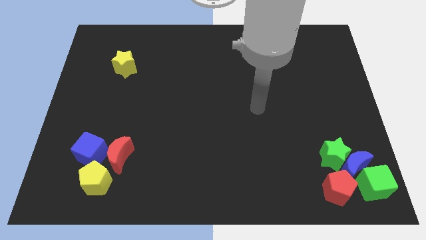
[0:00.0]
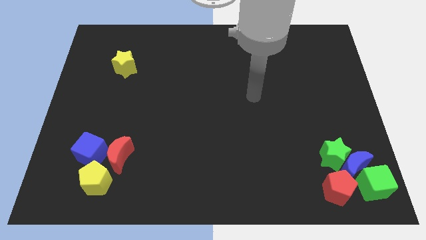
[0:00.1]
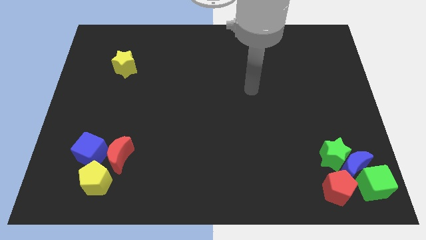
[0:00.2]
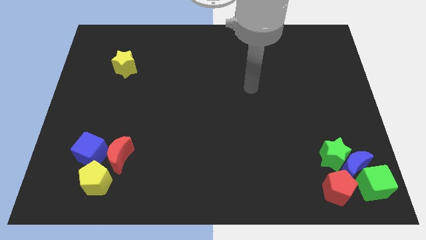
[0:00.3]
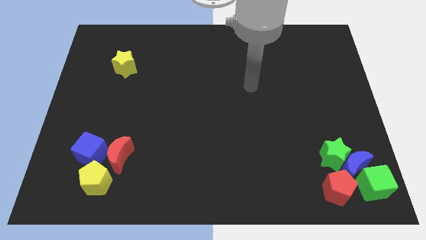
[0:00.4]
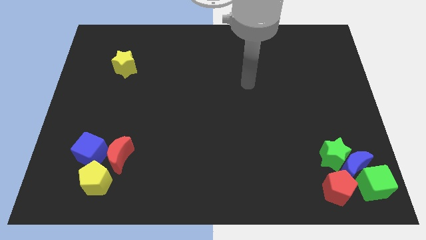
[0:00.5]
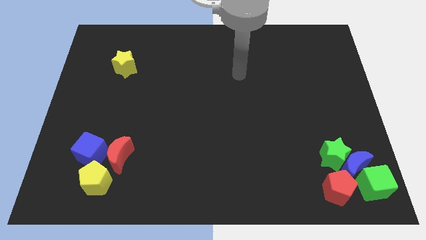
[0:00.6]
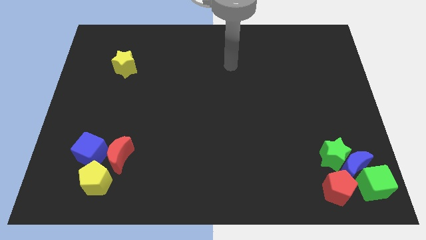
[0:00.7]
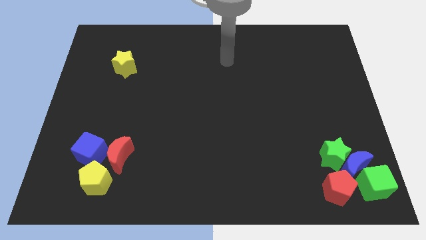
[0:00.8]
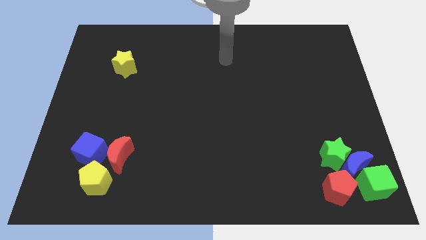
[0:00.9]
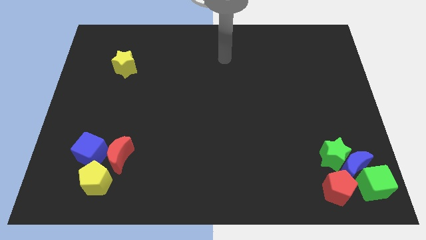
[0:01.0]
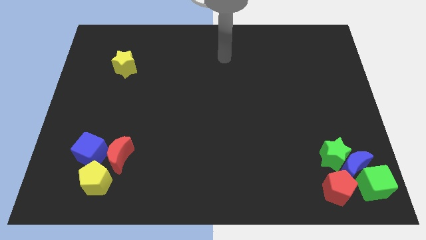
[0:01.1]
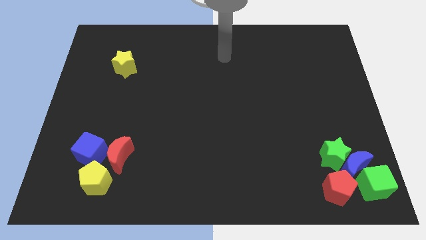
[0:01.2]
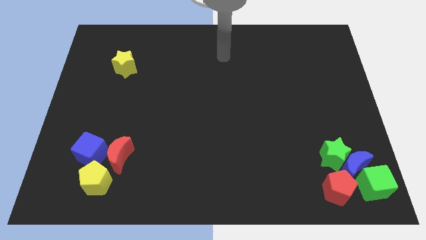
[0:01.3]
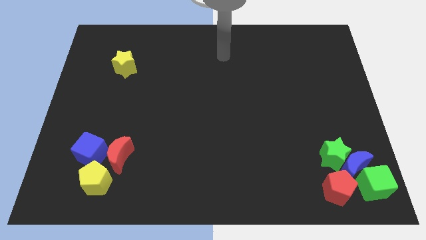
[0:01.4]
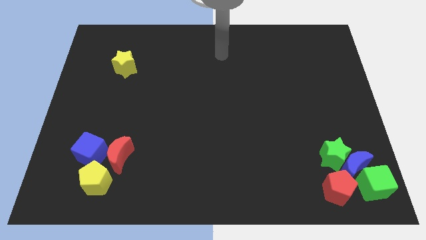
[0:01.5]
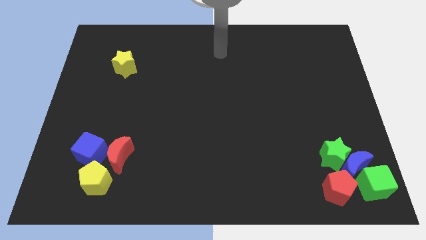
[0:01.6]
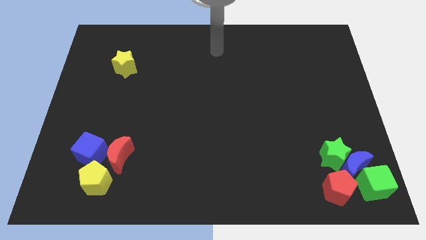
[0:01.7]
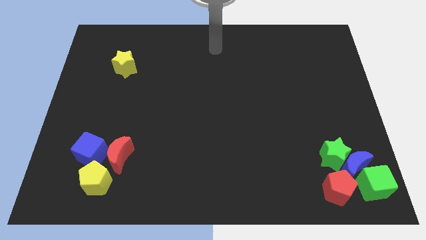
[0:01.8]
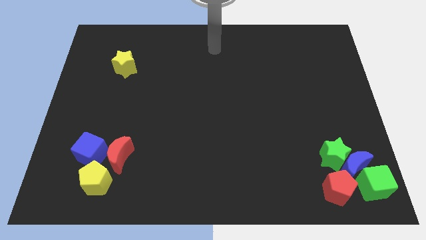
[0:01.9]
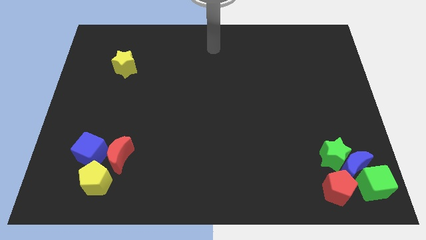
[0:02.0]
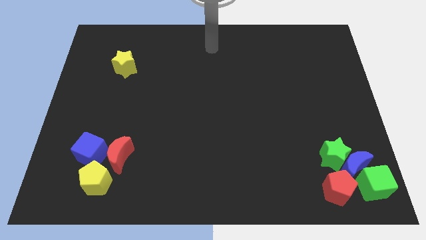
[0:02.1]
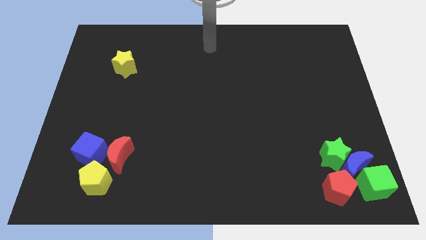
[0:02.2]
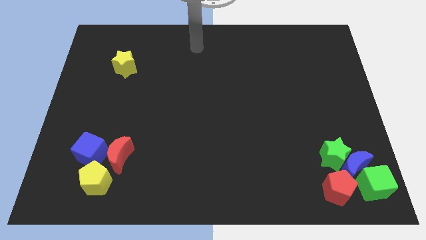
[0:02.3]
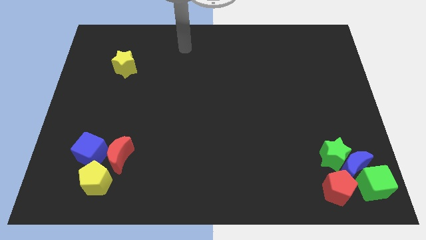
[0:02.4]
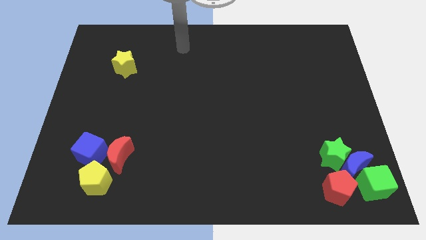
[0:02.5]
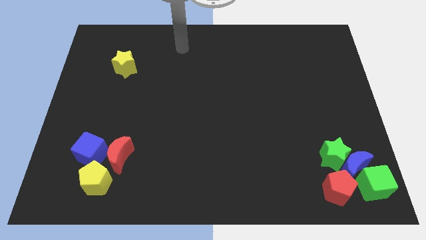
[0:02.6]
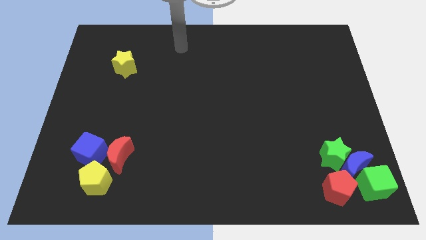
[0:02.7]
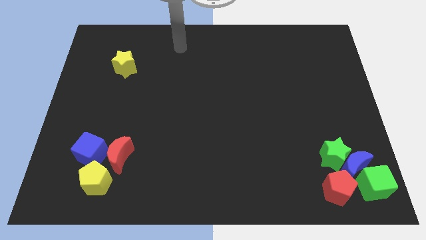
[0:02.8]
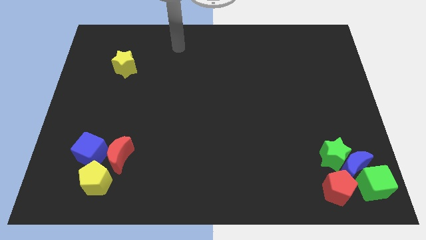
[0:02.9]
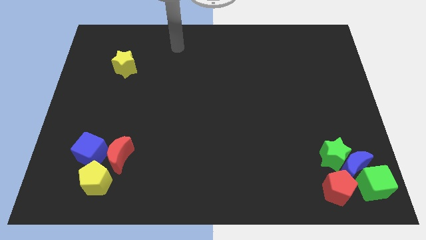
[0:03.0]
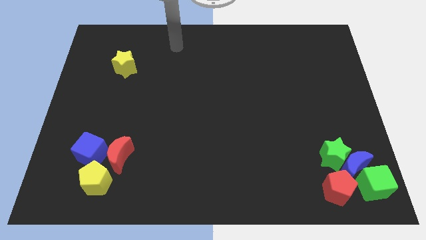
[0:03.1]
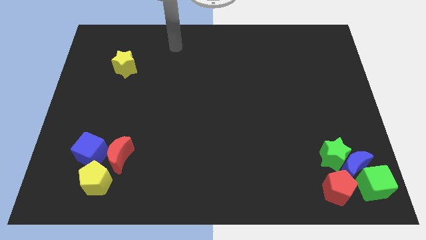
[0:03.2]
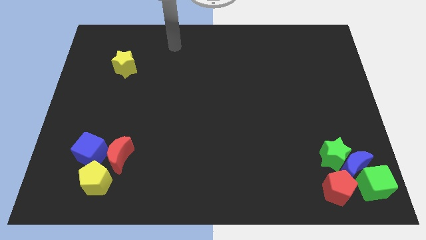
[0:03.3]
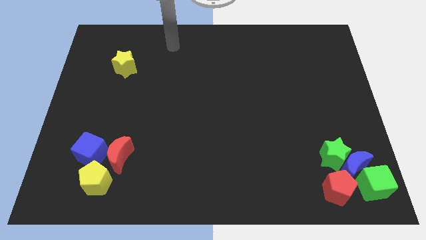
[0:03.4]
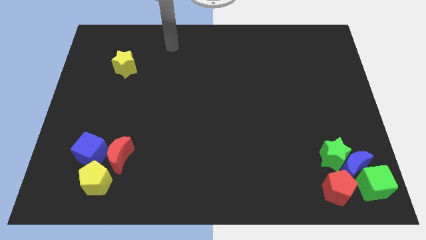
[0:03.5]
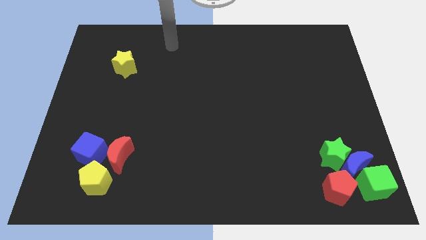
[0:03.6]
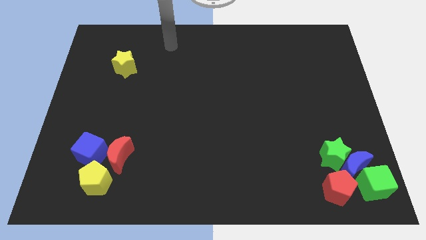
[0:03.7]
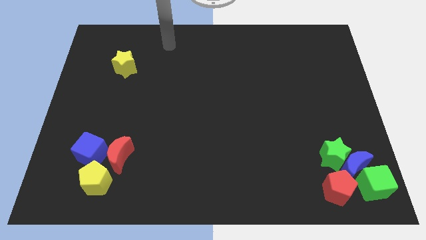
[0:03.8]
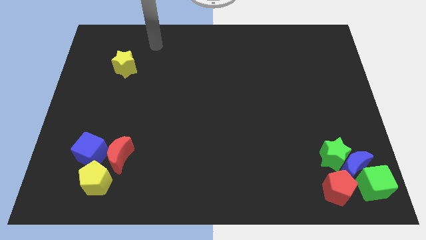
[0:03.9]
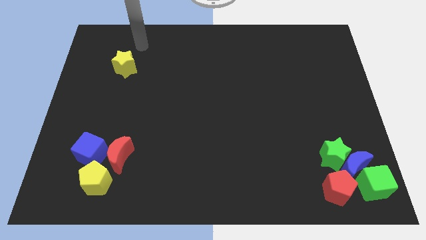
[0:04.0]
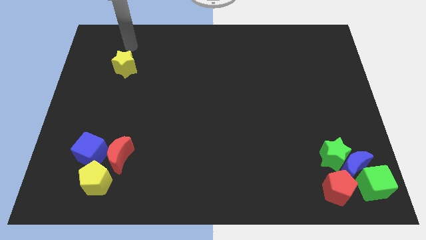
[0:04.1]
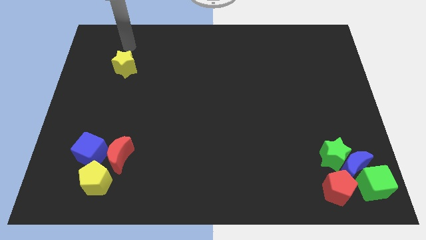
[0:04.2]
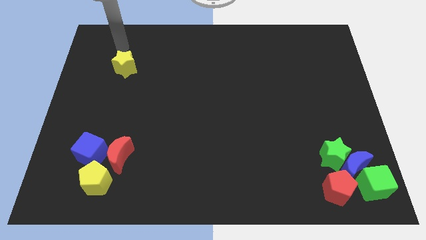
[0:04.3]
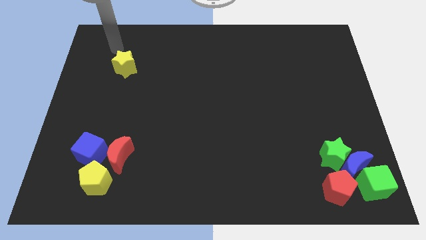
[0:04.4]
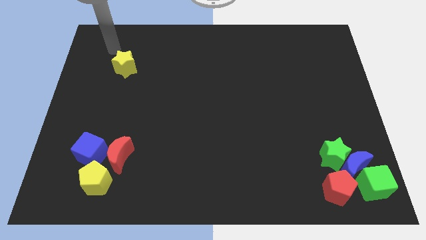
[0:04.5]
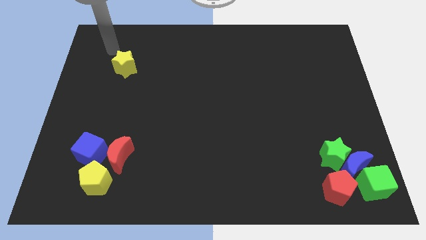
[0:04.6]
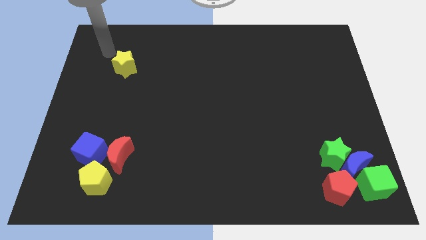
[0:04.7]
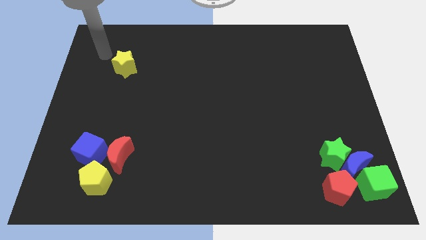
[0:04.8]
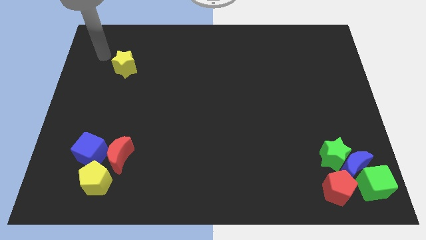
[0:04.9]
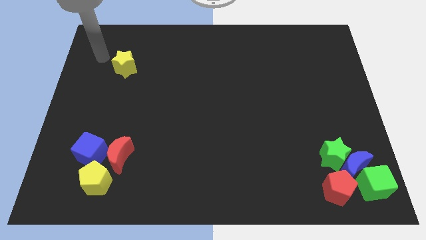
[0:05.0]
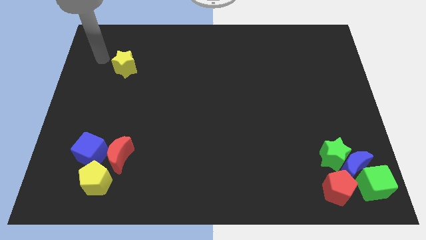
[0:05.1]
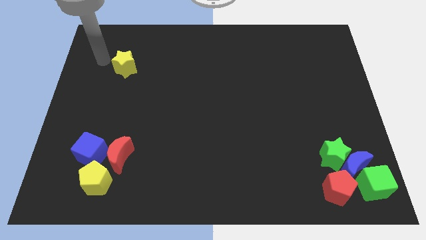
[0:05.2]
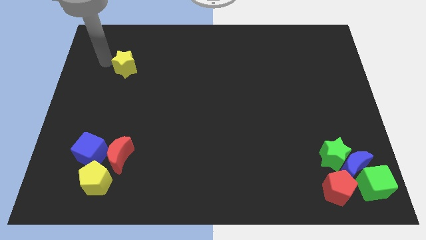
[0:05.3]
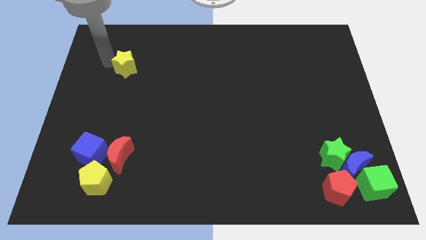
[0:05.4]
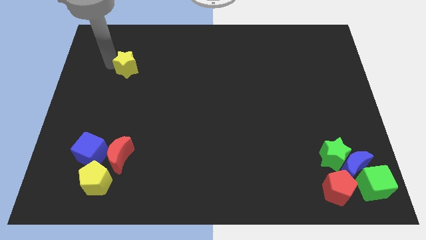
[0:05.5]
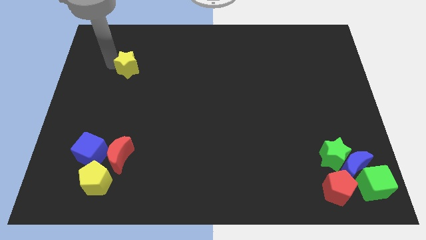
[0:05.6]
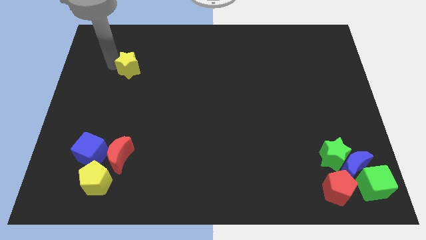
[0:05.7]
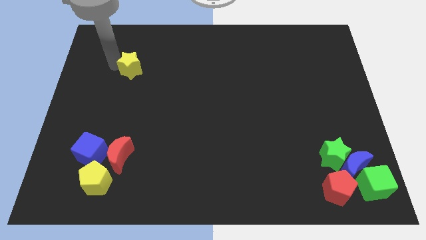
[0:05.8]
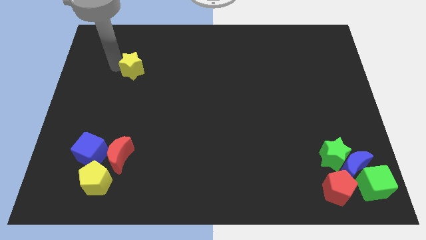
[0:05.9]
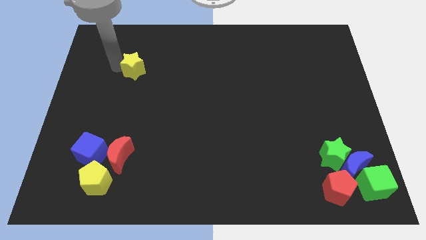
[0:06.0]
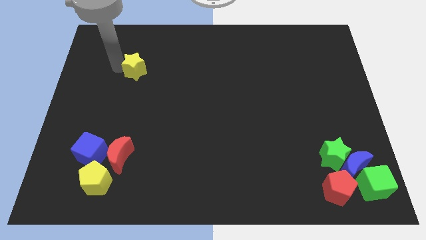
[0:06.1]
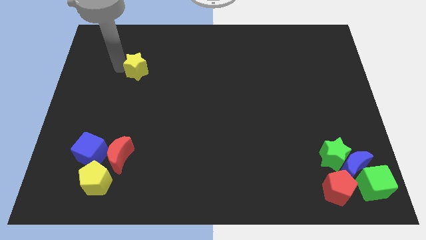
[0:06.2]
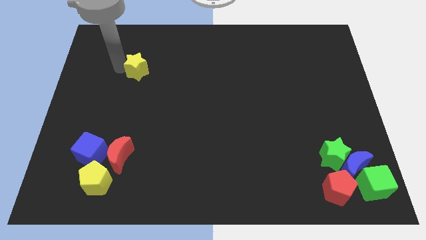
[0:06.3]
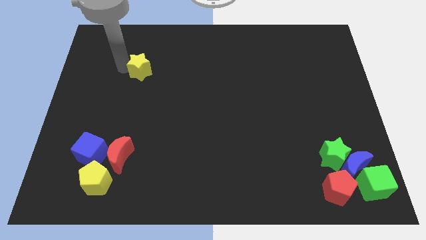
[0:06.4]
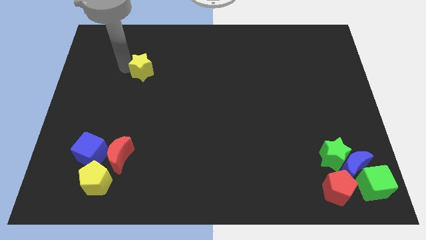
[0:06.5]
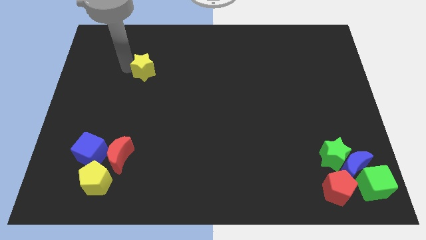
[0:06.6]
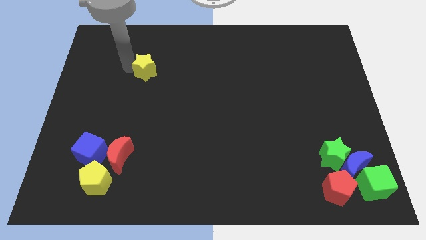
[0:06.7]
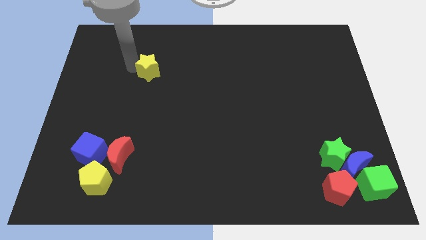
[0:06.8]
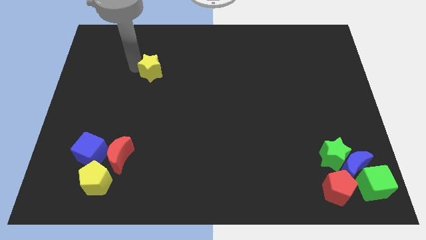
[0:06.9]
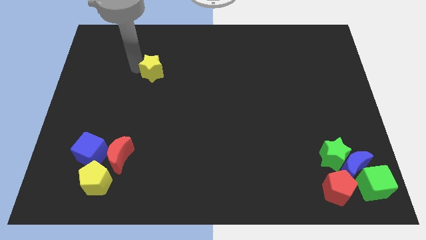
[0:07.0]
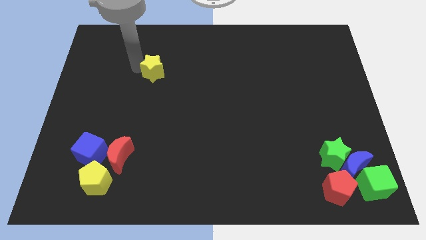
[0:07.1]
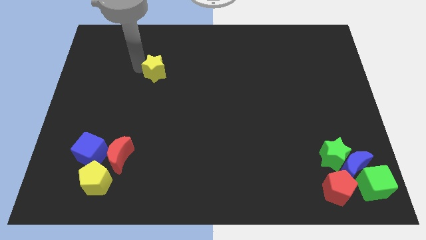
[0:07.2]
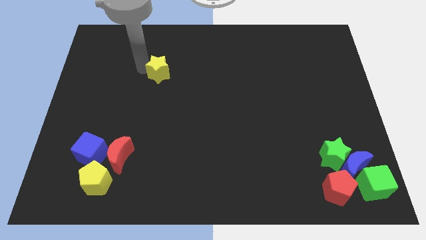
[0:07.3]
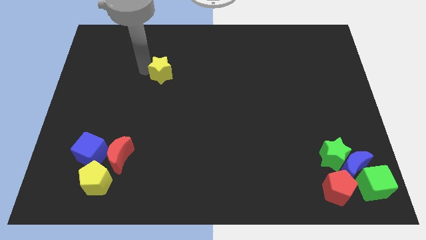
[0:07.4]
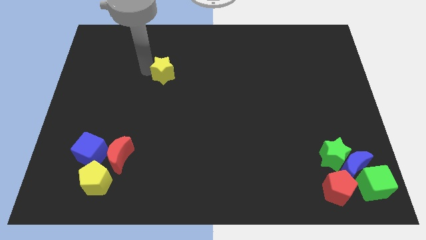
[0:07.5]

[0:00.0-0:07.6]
move the yellow star to the center of the board

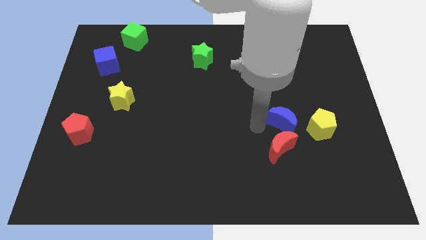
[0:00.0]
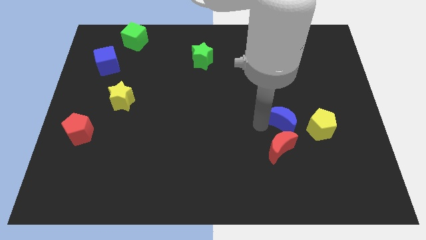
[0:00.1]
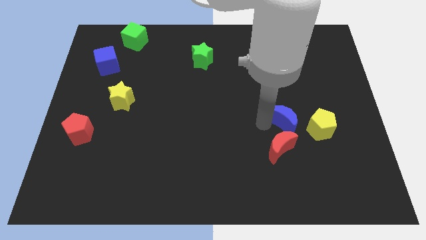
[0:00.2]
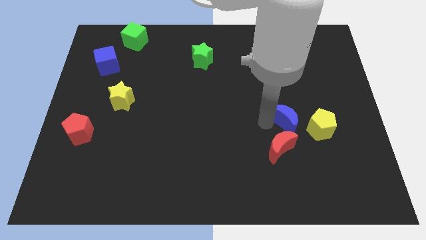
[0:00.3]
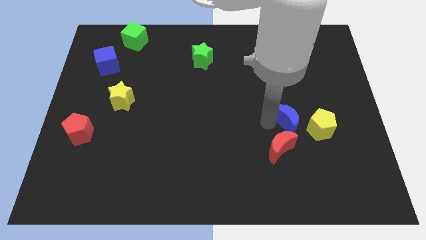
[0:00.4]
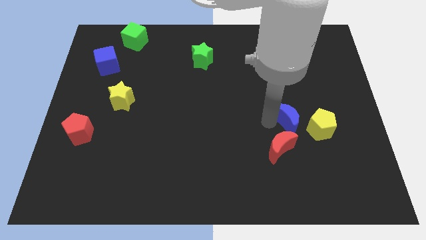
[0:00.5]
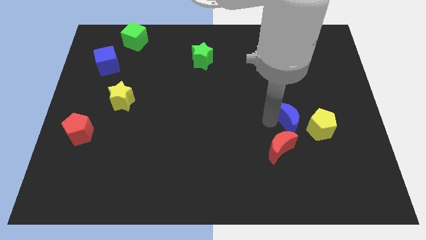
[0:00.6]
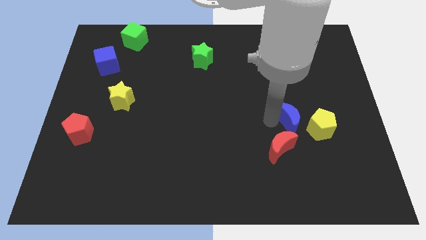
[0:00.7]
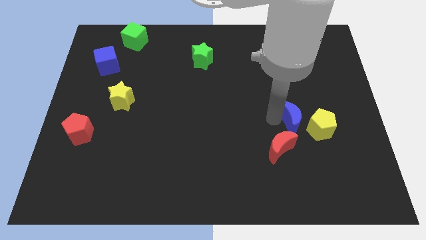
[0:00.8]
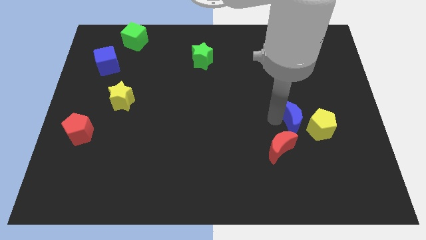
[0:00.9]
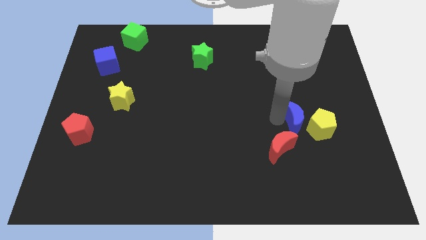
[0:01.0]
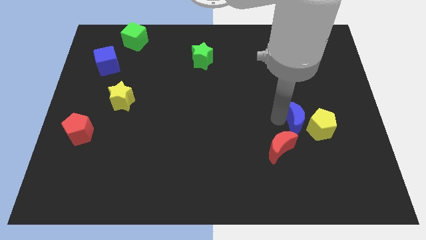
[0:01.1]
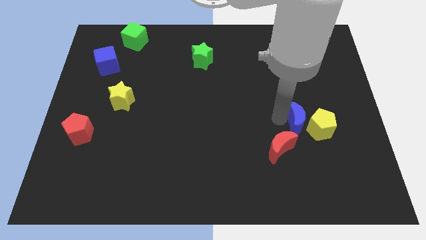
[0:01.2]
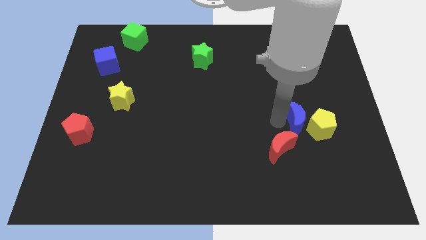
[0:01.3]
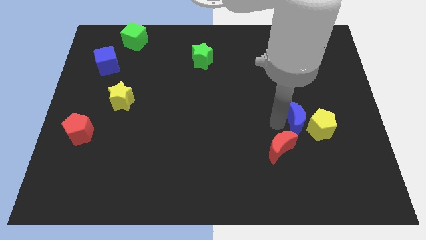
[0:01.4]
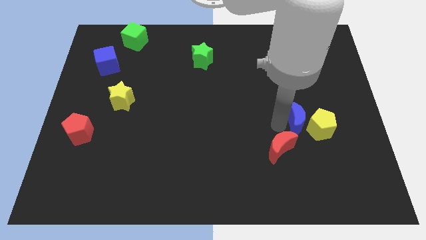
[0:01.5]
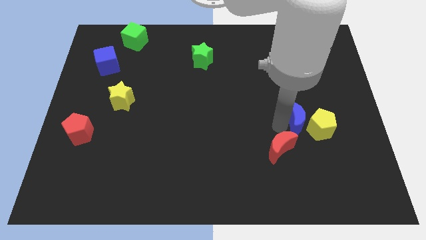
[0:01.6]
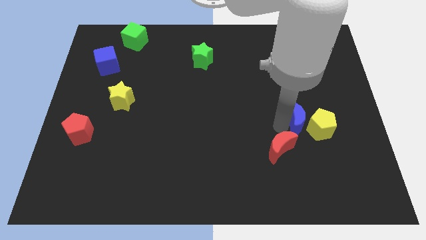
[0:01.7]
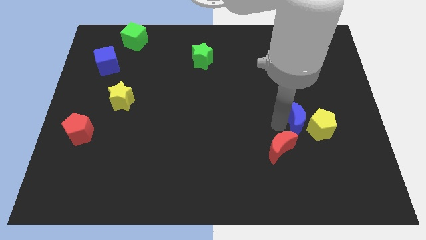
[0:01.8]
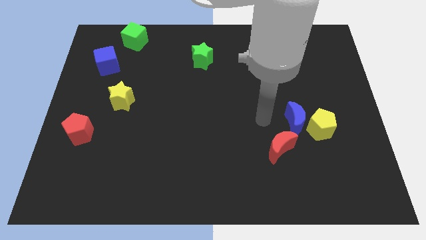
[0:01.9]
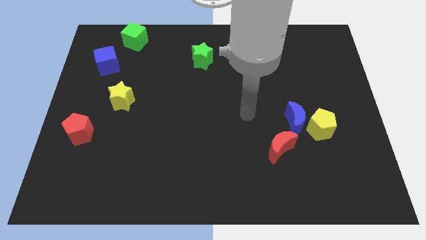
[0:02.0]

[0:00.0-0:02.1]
slide blue moon into yellow pentagon
